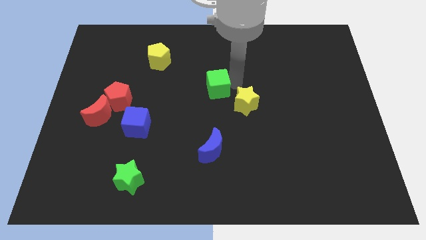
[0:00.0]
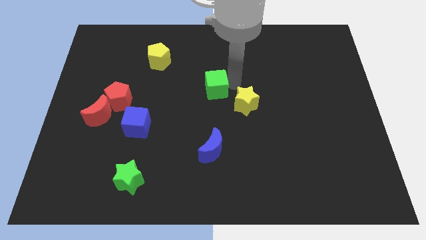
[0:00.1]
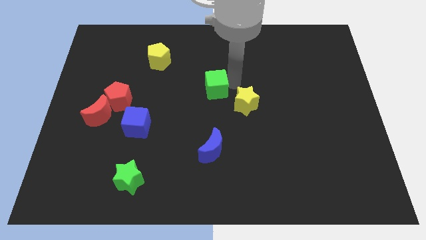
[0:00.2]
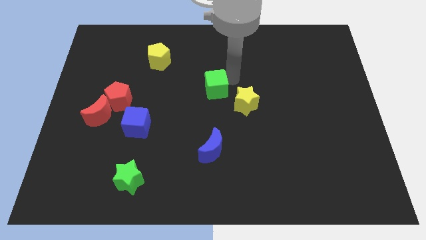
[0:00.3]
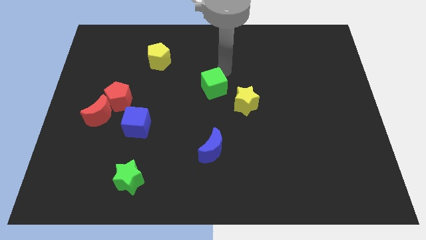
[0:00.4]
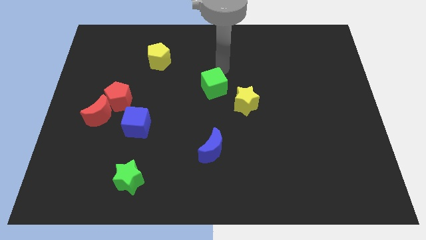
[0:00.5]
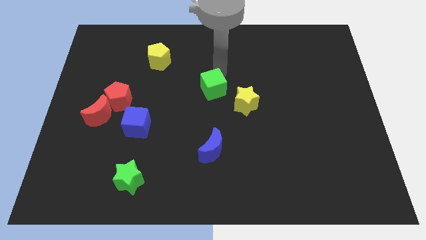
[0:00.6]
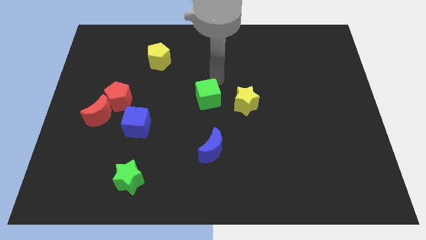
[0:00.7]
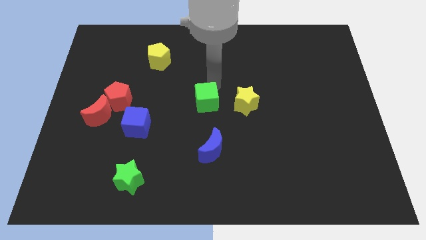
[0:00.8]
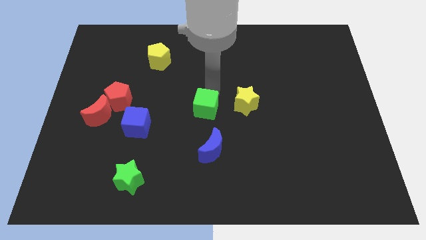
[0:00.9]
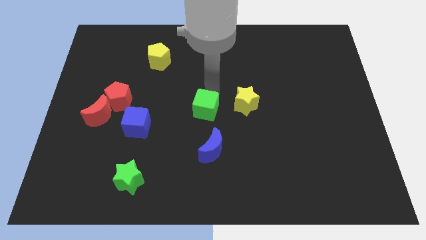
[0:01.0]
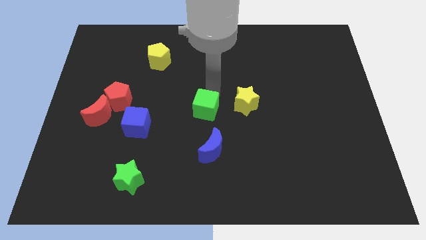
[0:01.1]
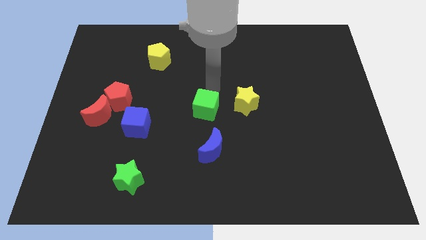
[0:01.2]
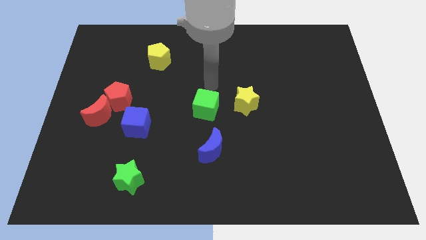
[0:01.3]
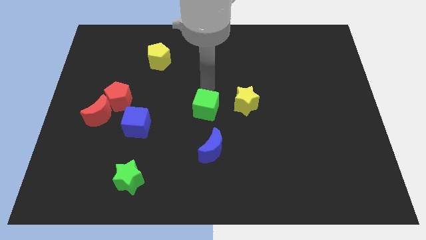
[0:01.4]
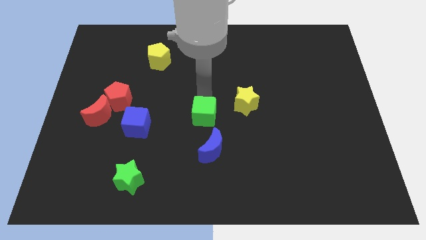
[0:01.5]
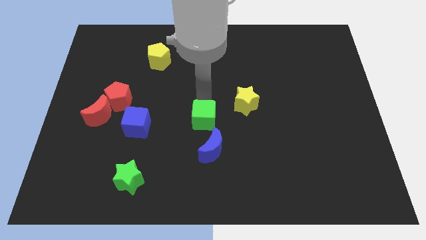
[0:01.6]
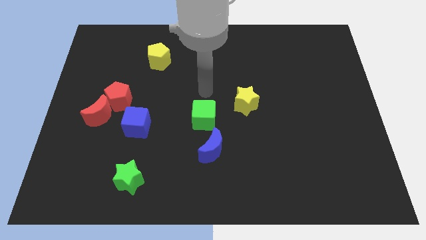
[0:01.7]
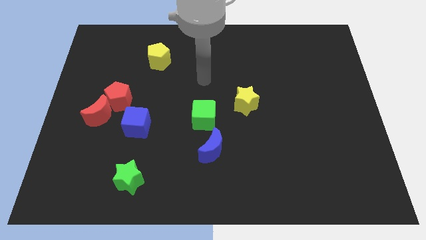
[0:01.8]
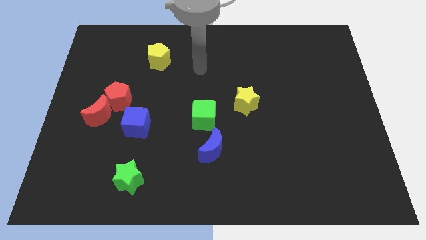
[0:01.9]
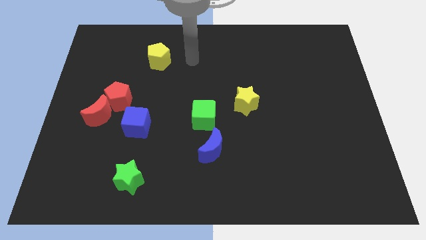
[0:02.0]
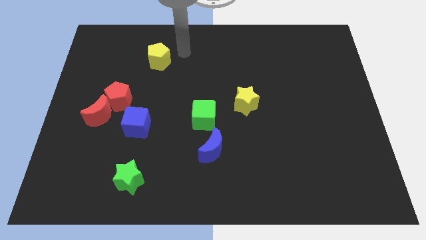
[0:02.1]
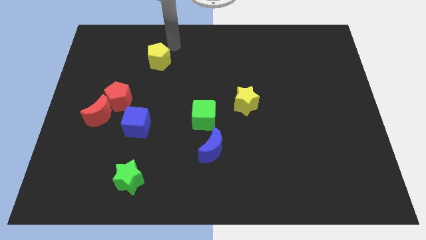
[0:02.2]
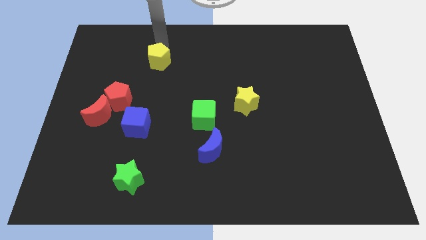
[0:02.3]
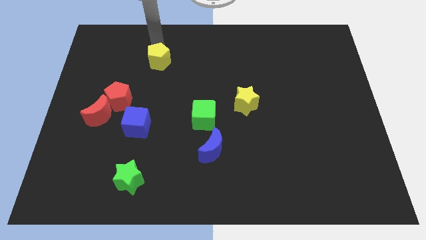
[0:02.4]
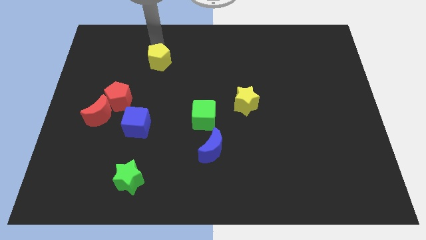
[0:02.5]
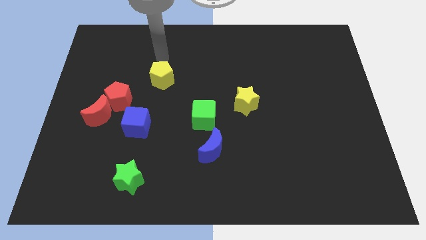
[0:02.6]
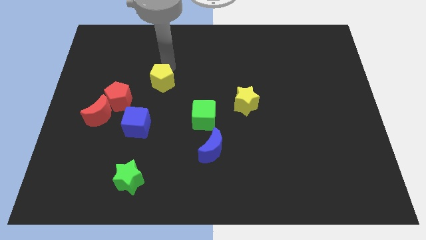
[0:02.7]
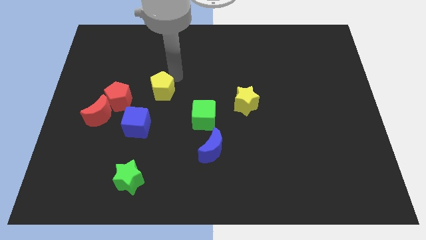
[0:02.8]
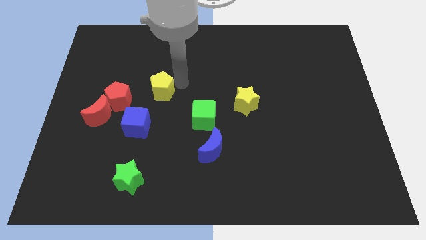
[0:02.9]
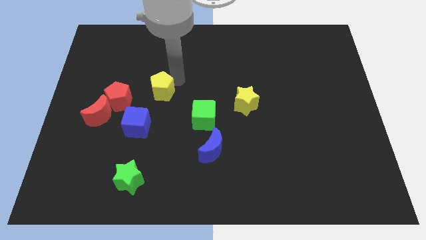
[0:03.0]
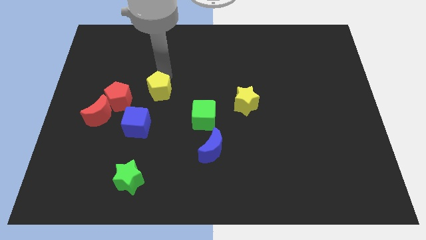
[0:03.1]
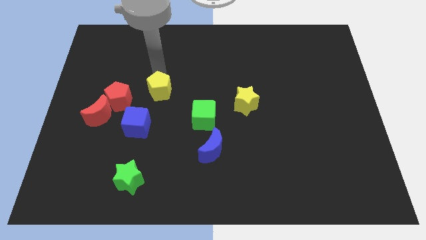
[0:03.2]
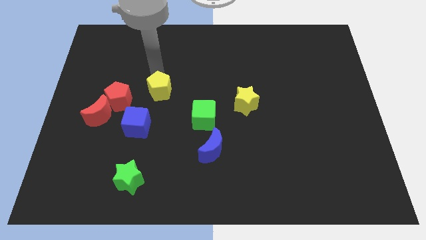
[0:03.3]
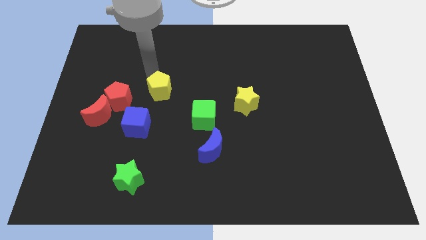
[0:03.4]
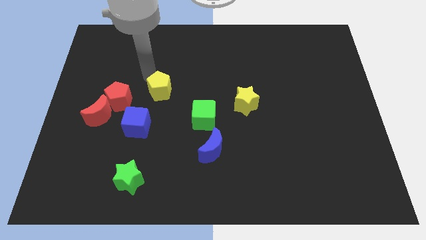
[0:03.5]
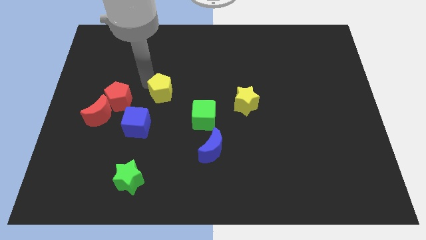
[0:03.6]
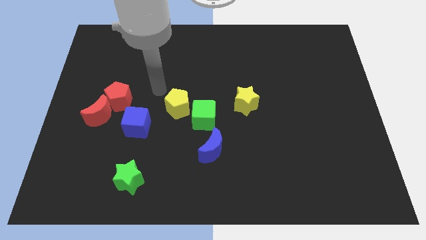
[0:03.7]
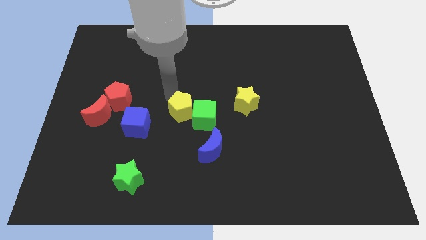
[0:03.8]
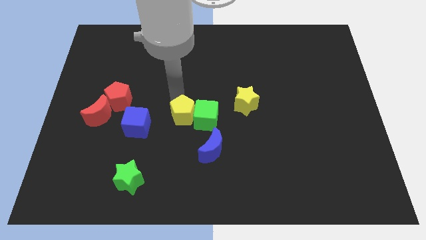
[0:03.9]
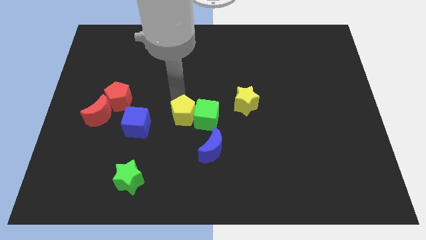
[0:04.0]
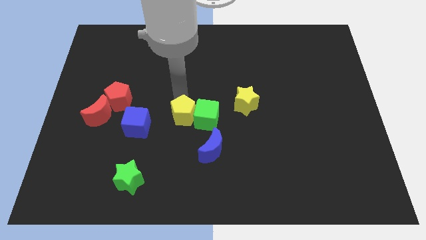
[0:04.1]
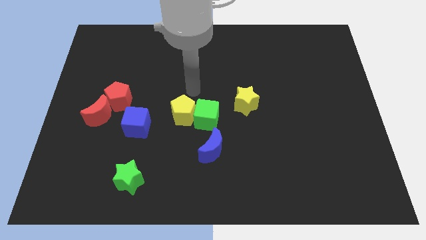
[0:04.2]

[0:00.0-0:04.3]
drag the yellow pentagon close to the left of the green cube

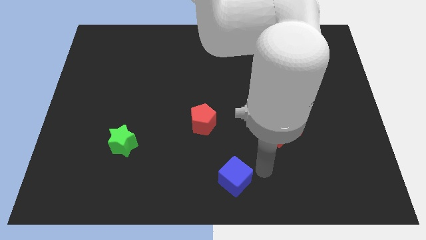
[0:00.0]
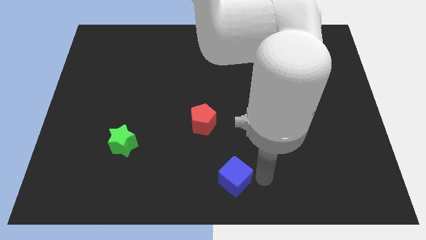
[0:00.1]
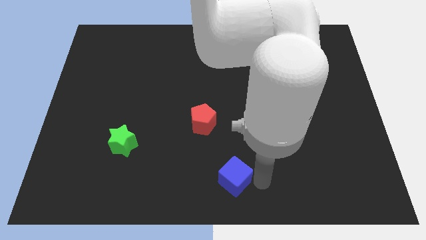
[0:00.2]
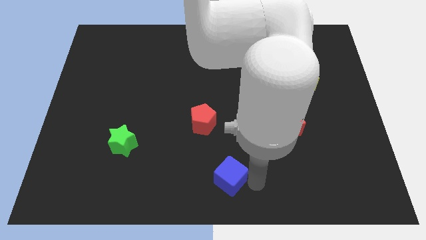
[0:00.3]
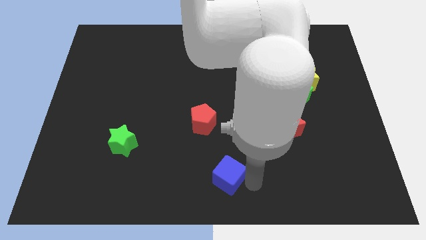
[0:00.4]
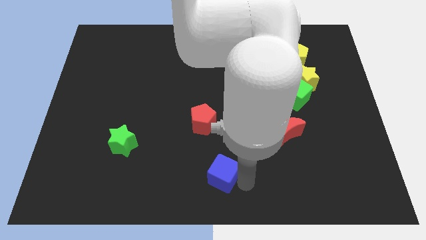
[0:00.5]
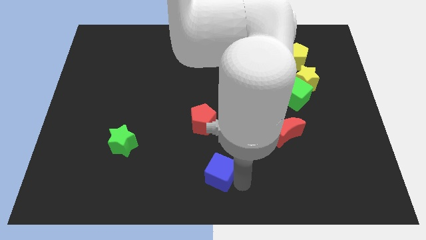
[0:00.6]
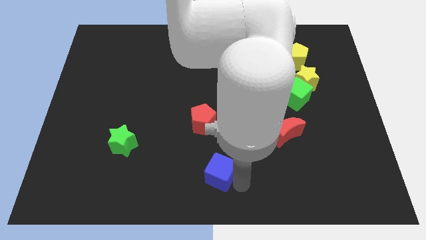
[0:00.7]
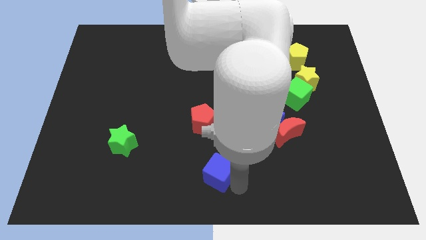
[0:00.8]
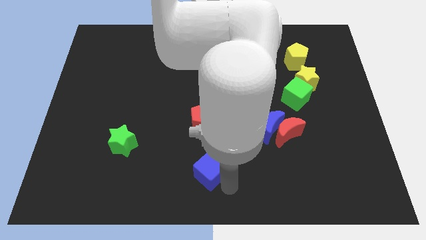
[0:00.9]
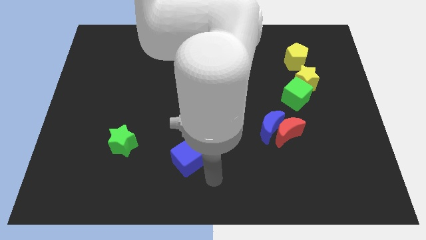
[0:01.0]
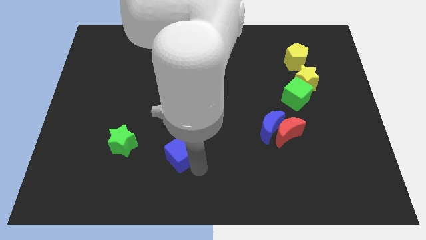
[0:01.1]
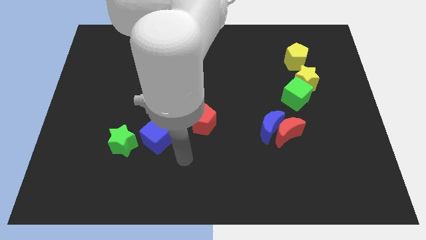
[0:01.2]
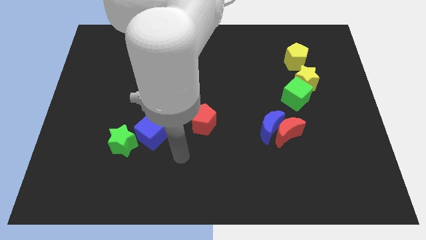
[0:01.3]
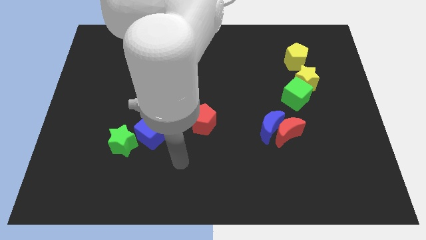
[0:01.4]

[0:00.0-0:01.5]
move the blue cube to the right side of the green star

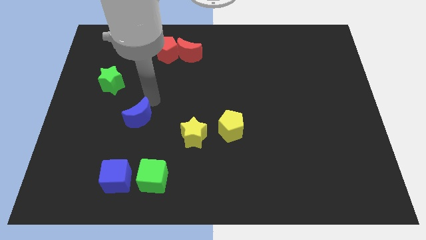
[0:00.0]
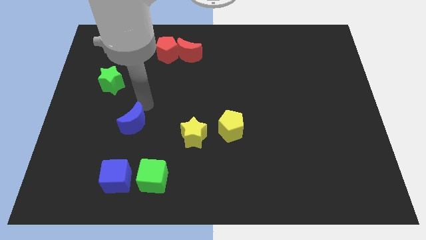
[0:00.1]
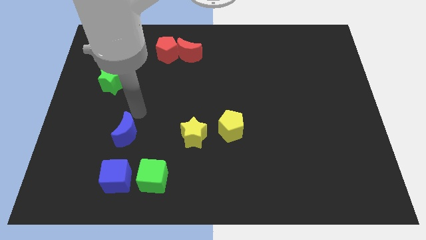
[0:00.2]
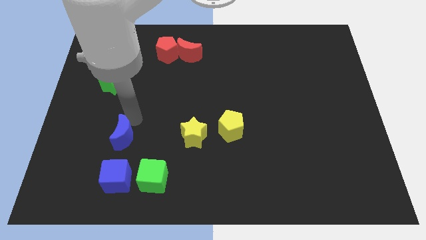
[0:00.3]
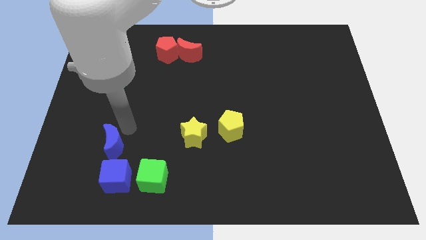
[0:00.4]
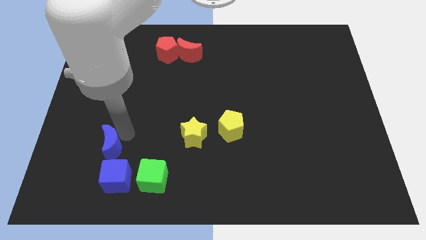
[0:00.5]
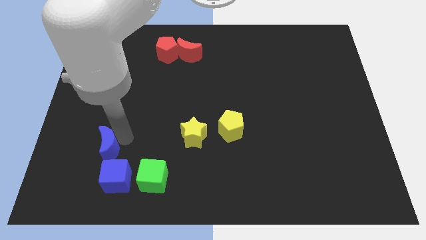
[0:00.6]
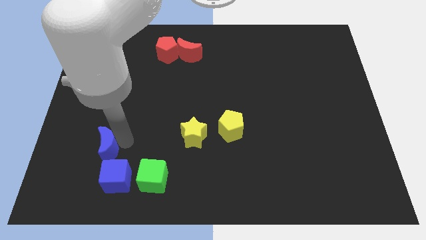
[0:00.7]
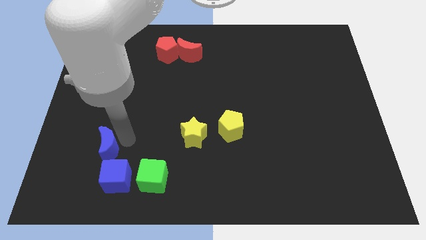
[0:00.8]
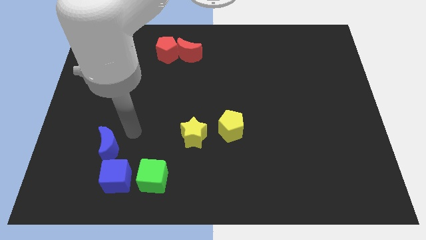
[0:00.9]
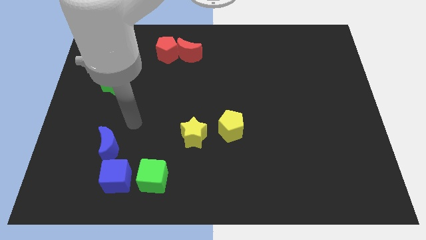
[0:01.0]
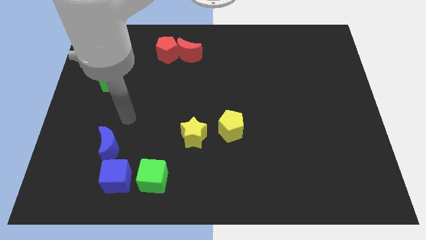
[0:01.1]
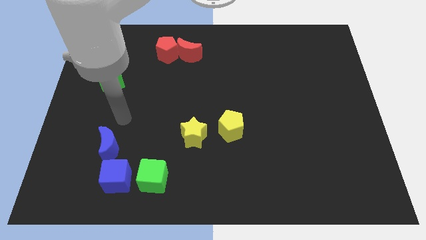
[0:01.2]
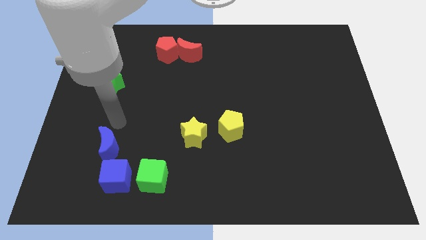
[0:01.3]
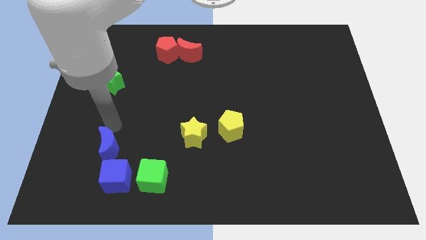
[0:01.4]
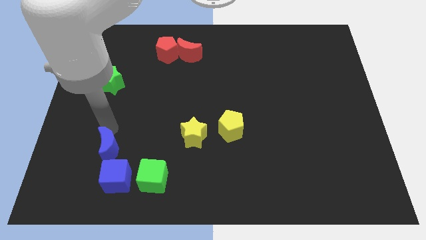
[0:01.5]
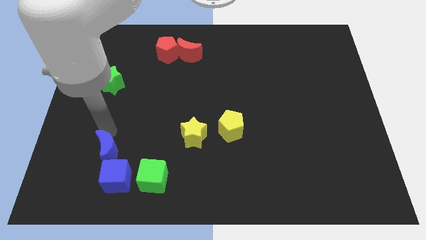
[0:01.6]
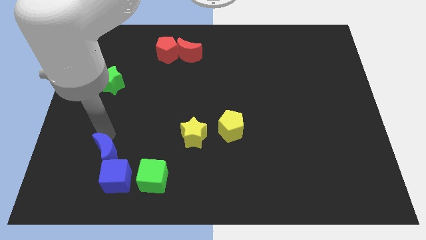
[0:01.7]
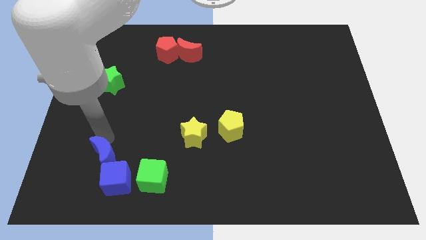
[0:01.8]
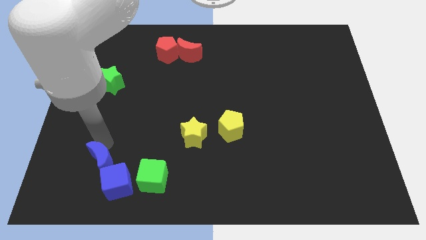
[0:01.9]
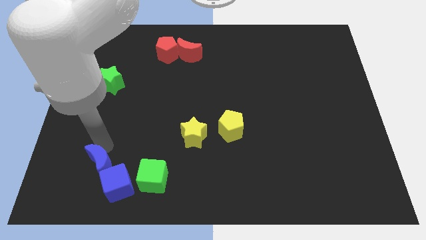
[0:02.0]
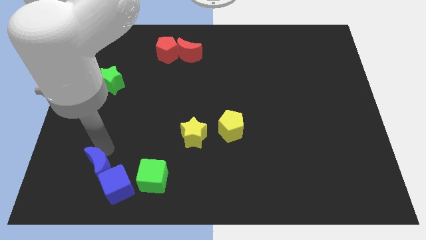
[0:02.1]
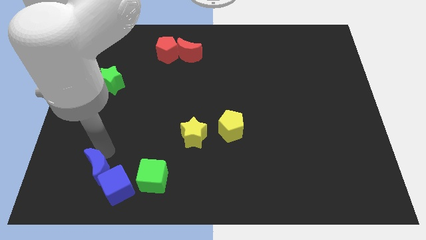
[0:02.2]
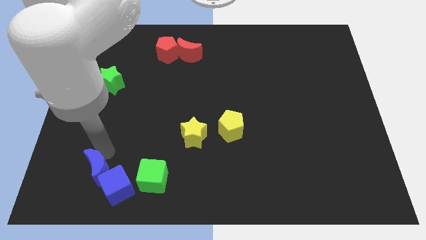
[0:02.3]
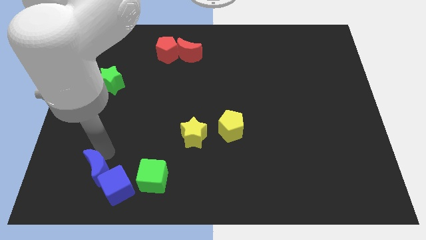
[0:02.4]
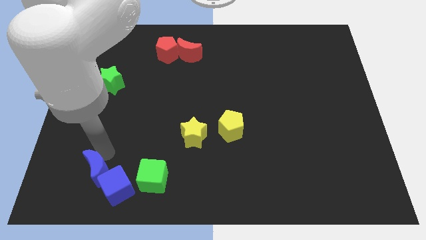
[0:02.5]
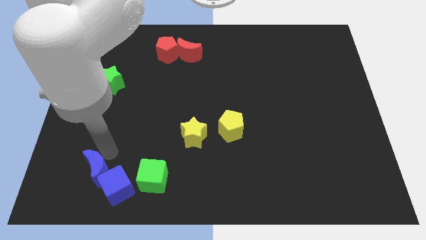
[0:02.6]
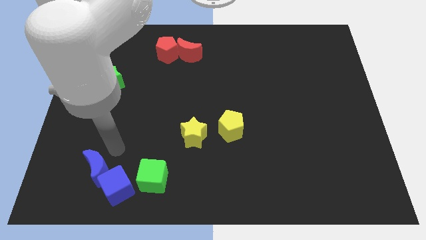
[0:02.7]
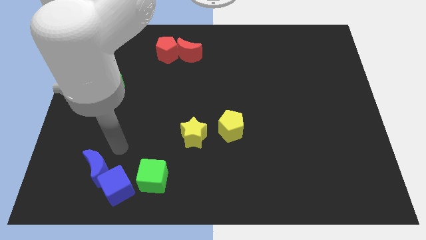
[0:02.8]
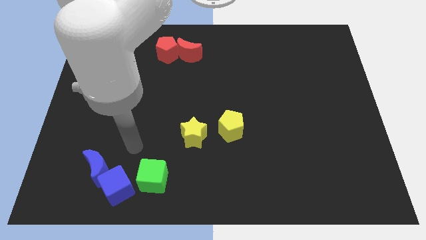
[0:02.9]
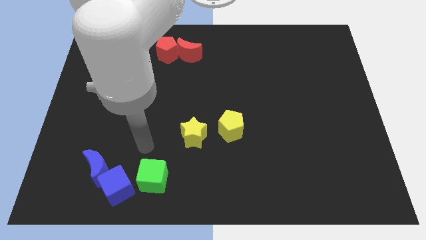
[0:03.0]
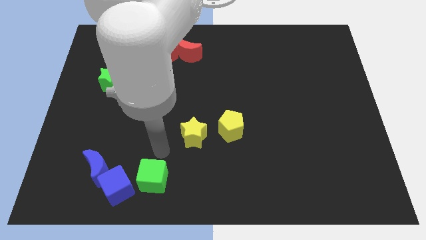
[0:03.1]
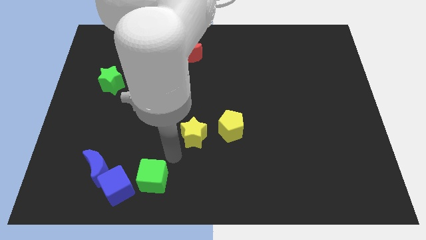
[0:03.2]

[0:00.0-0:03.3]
push the blue moon into the blue cube
